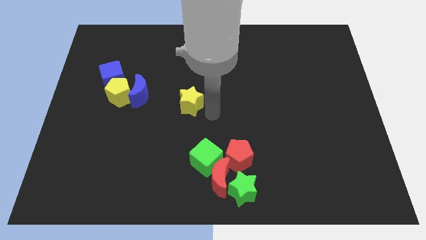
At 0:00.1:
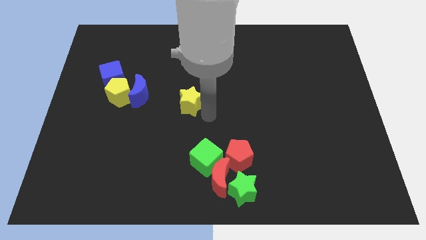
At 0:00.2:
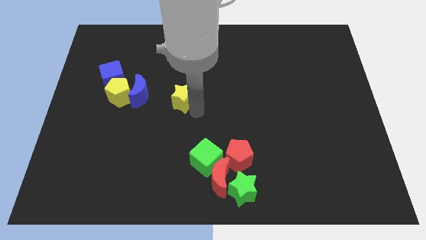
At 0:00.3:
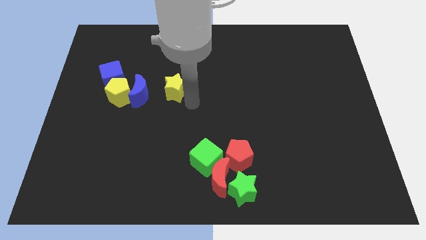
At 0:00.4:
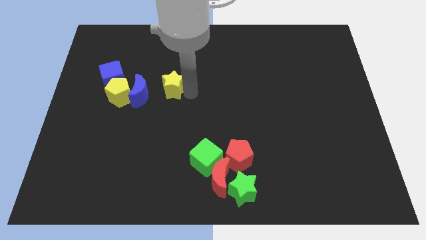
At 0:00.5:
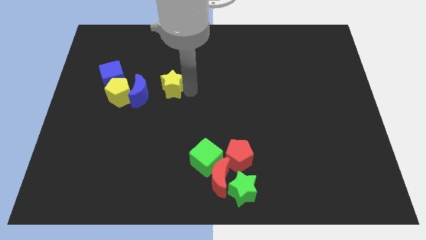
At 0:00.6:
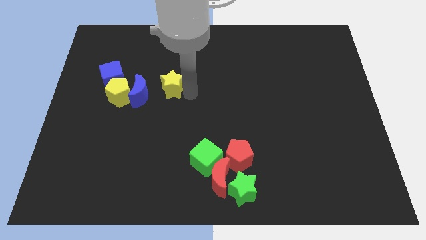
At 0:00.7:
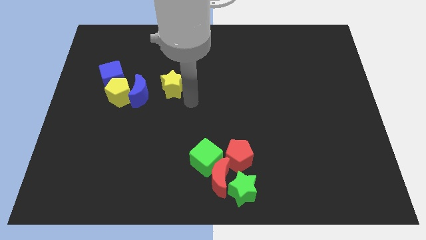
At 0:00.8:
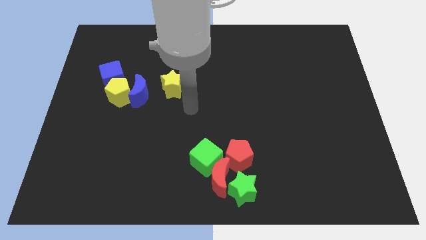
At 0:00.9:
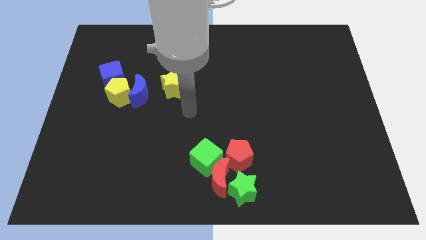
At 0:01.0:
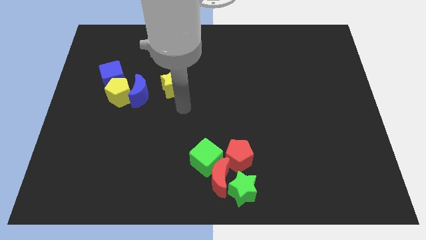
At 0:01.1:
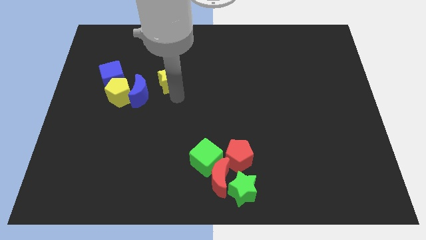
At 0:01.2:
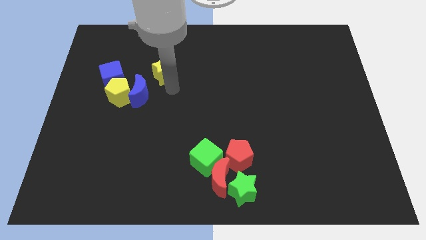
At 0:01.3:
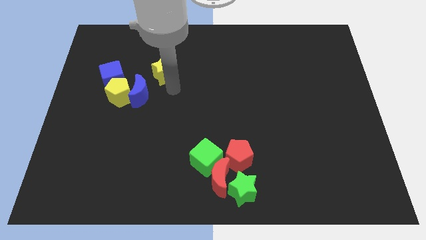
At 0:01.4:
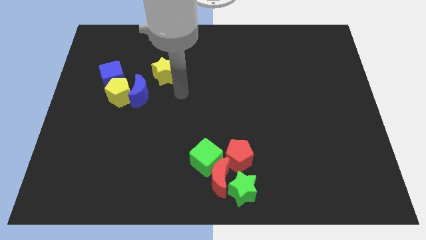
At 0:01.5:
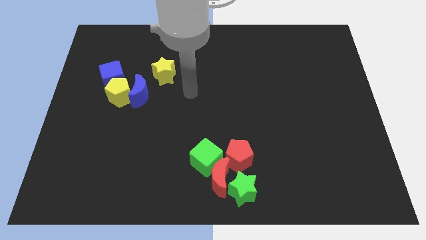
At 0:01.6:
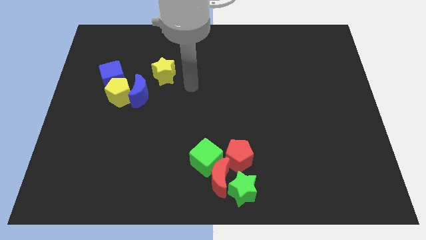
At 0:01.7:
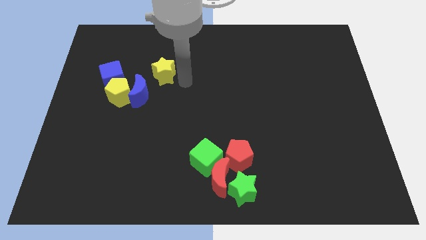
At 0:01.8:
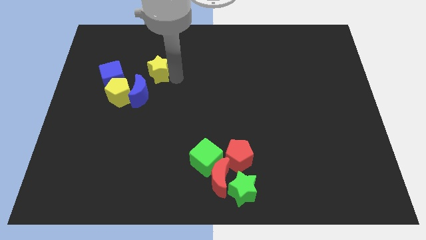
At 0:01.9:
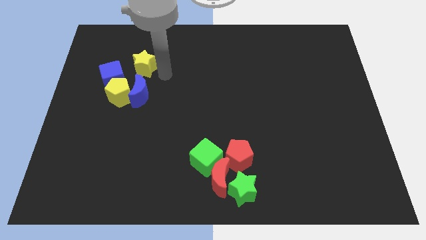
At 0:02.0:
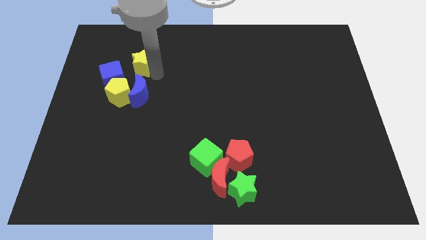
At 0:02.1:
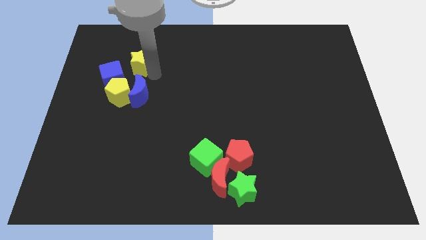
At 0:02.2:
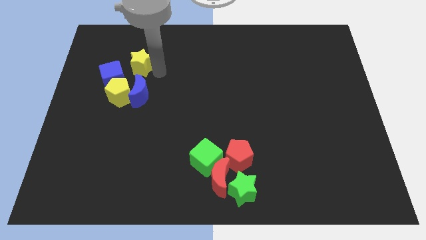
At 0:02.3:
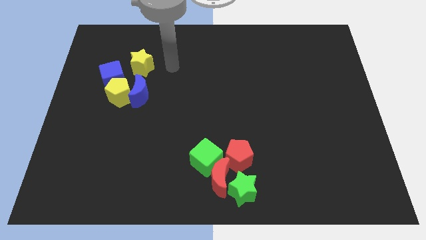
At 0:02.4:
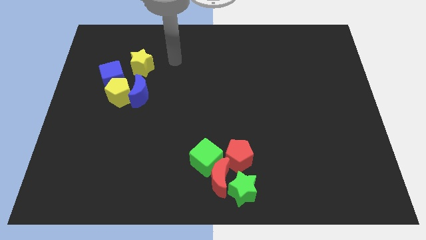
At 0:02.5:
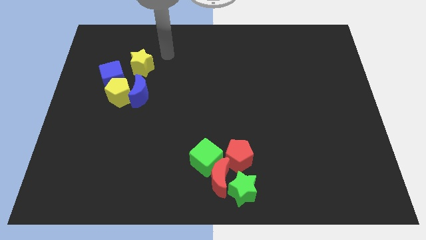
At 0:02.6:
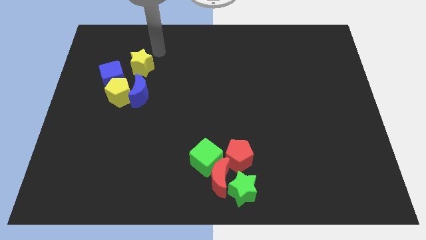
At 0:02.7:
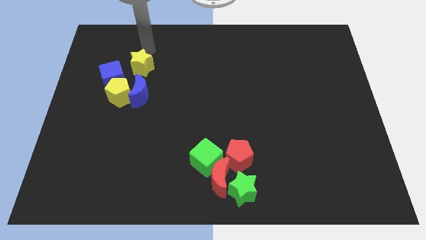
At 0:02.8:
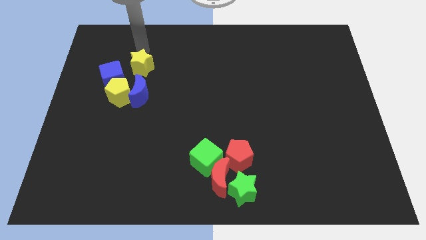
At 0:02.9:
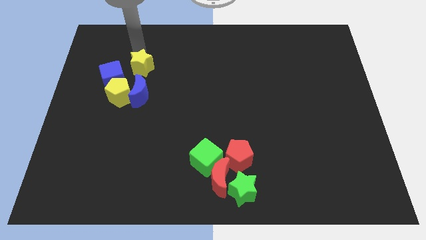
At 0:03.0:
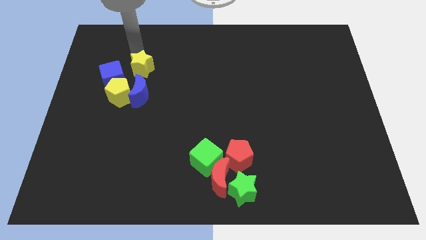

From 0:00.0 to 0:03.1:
place the yellow star to the top of blue moon

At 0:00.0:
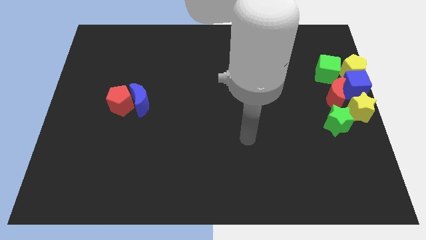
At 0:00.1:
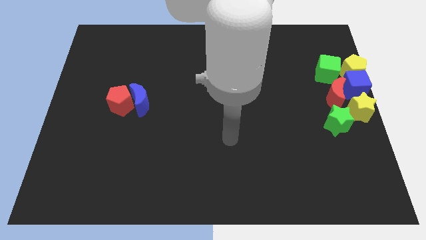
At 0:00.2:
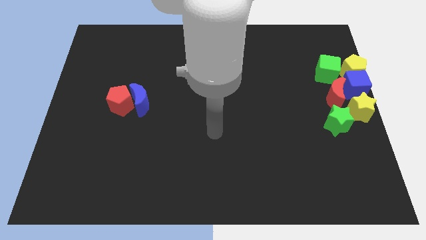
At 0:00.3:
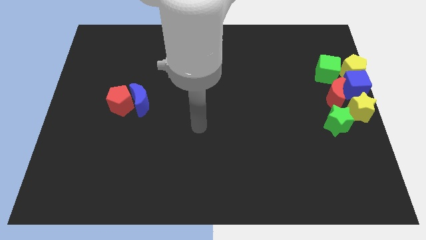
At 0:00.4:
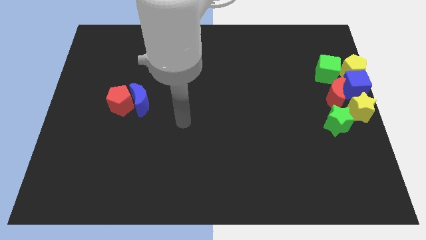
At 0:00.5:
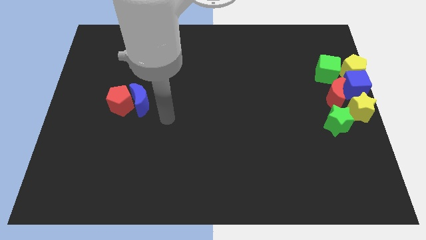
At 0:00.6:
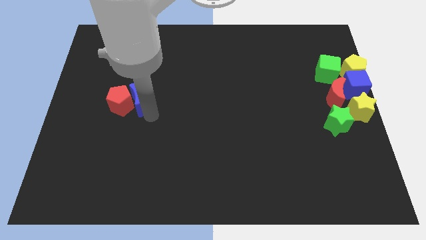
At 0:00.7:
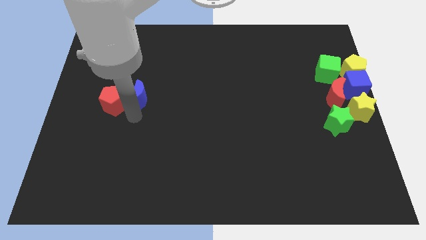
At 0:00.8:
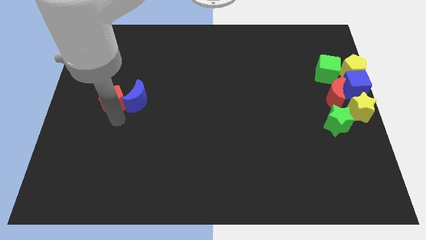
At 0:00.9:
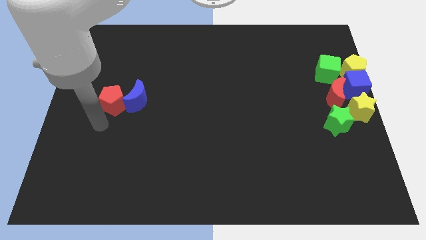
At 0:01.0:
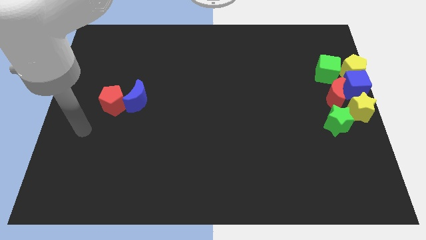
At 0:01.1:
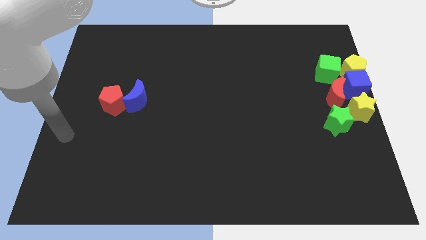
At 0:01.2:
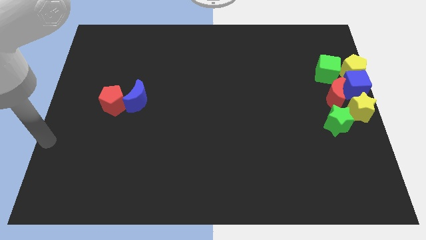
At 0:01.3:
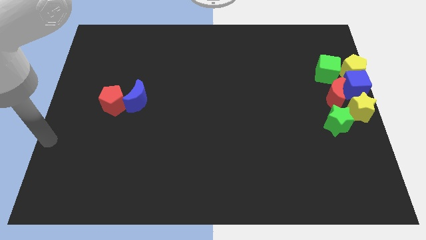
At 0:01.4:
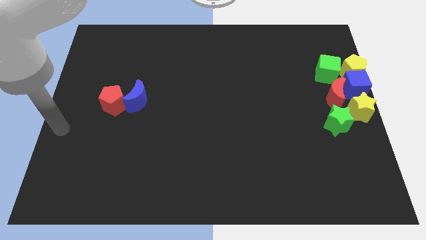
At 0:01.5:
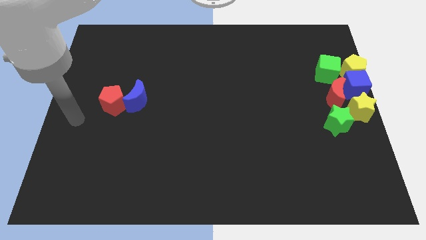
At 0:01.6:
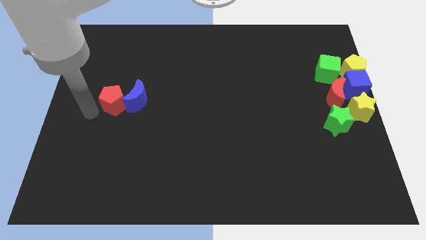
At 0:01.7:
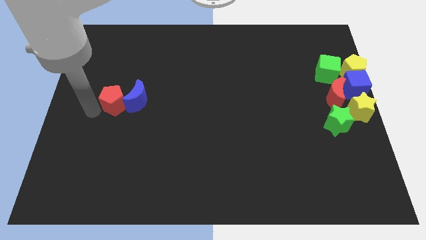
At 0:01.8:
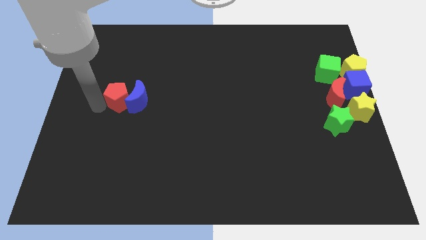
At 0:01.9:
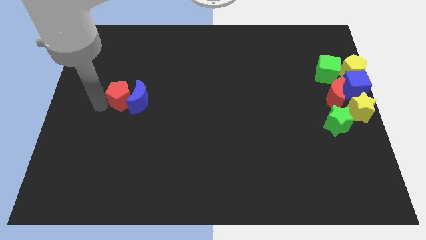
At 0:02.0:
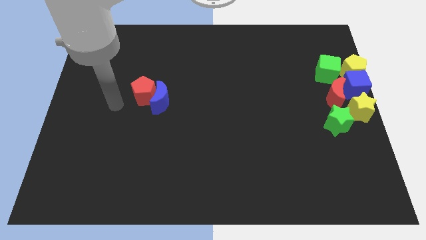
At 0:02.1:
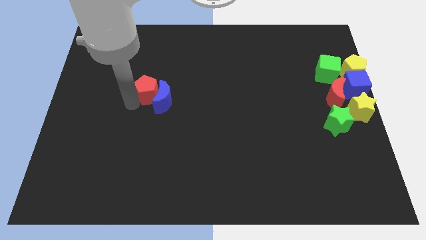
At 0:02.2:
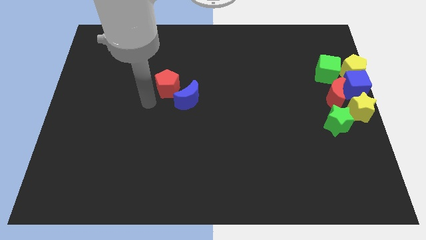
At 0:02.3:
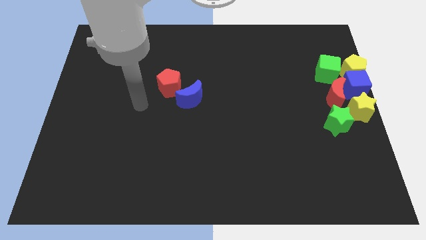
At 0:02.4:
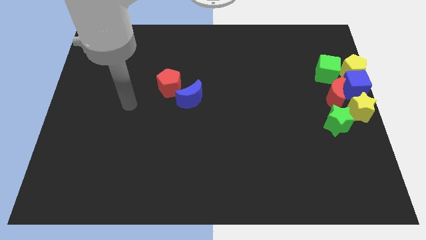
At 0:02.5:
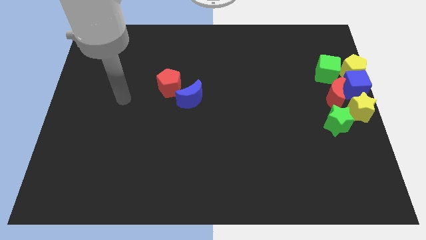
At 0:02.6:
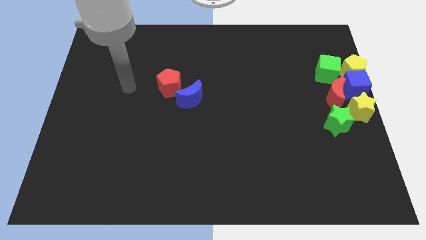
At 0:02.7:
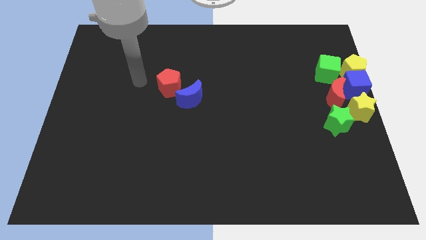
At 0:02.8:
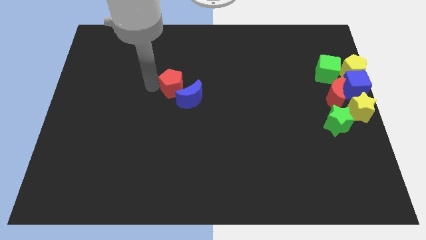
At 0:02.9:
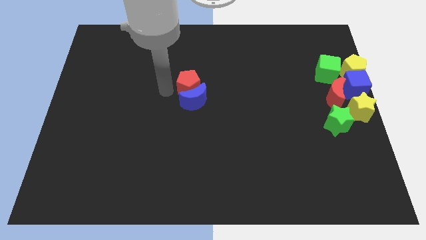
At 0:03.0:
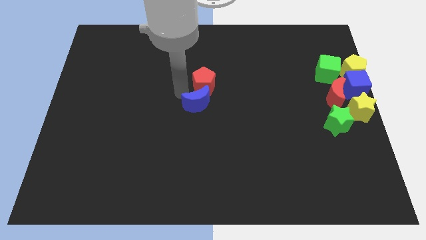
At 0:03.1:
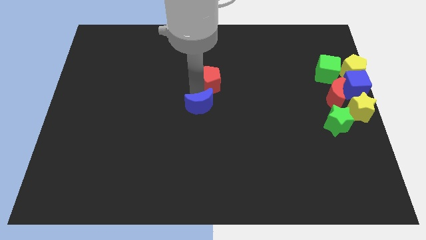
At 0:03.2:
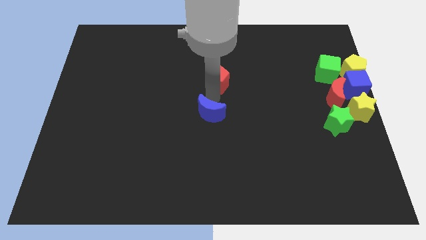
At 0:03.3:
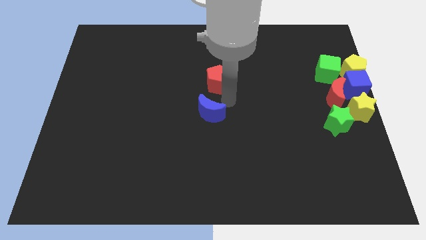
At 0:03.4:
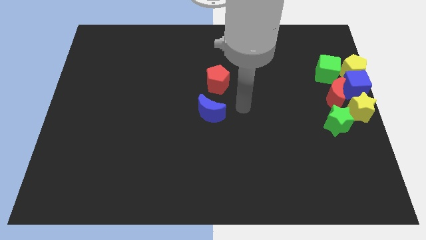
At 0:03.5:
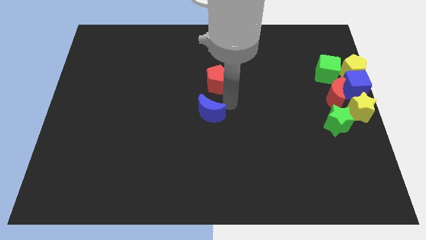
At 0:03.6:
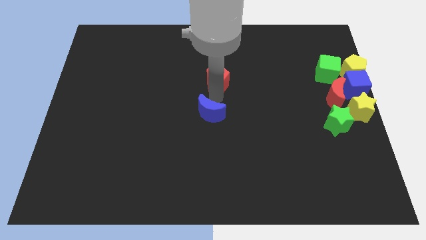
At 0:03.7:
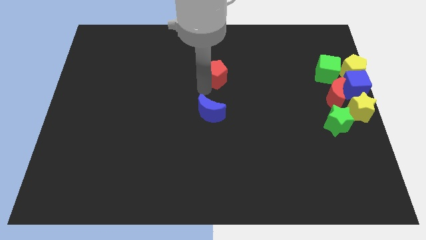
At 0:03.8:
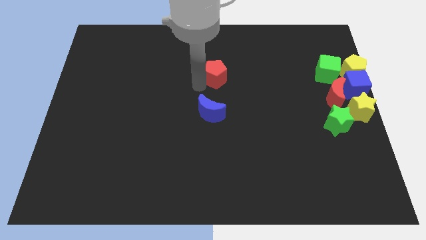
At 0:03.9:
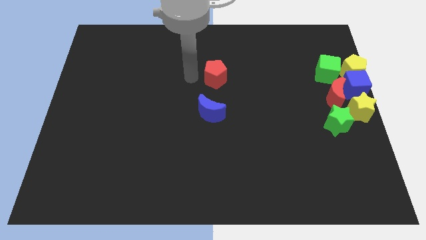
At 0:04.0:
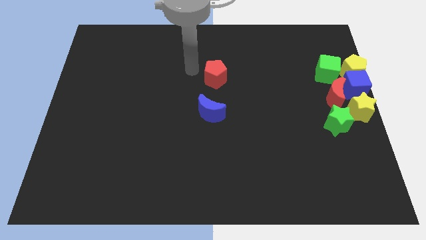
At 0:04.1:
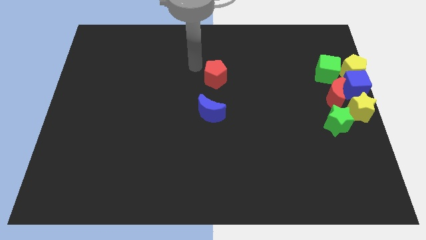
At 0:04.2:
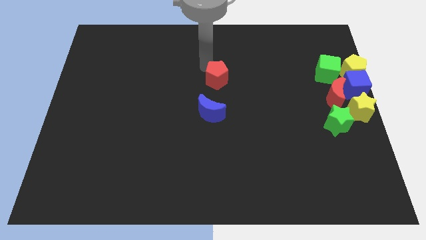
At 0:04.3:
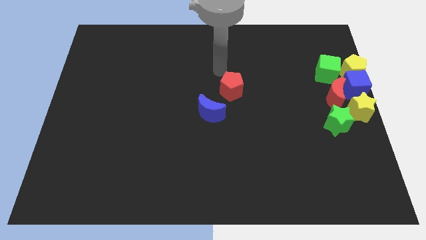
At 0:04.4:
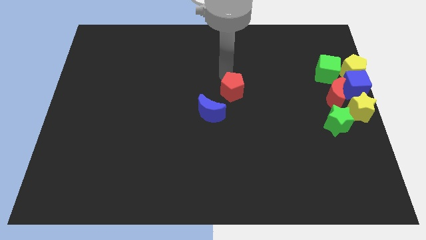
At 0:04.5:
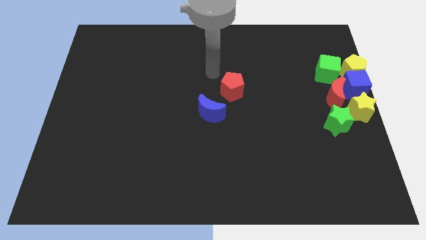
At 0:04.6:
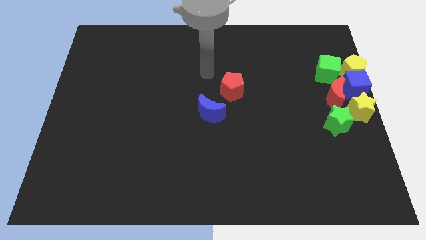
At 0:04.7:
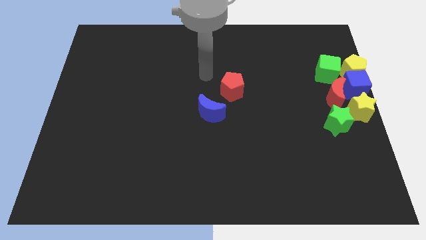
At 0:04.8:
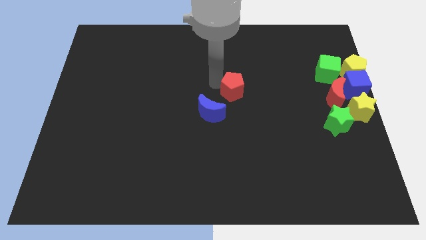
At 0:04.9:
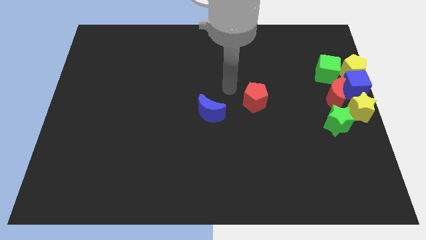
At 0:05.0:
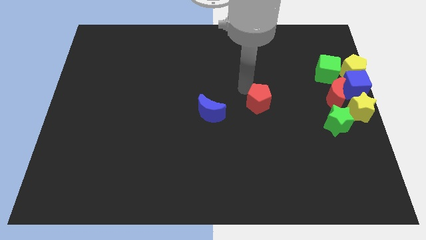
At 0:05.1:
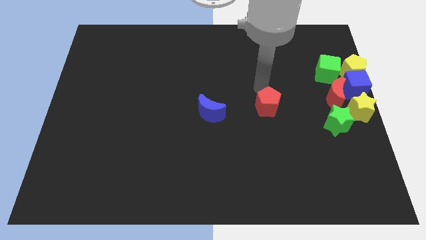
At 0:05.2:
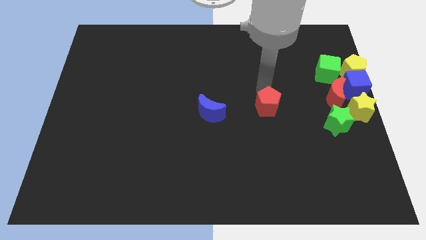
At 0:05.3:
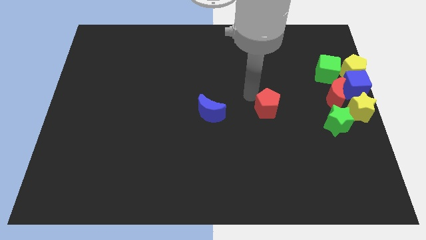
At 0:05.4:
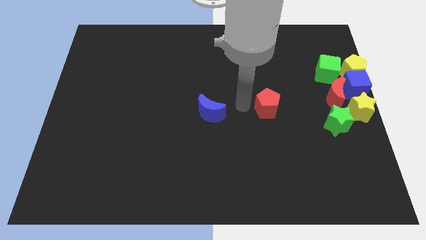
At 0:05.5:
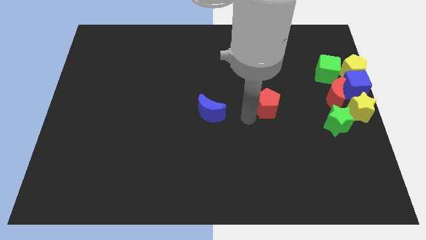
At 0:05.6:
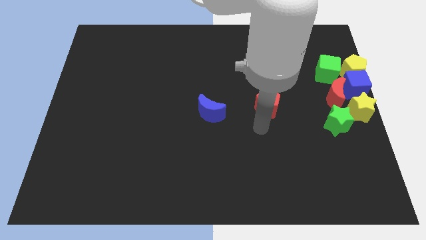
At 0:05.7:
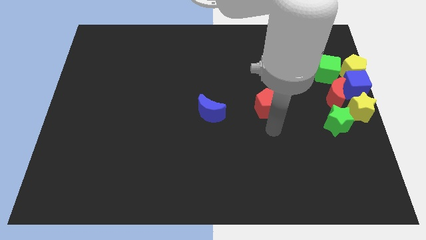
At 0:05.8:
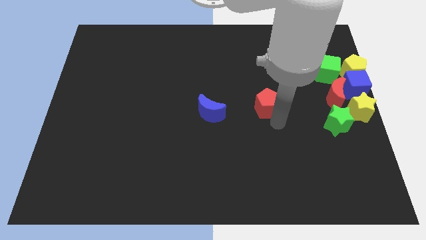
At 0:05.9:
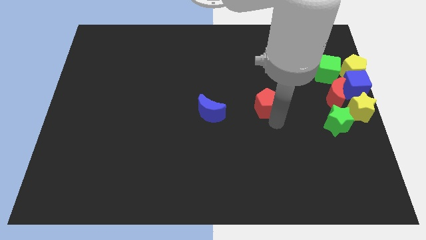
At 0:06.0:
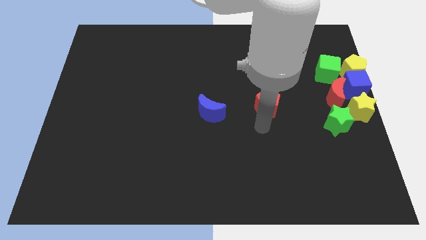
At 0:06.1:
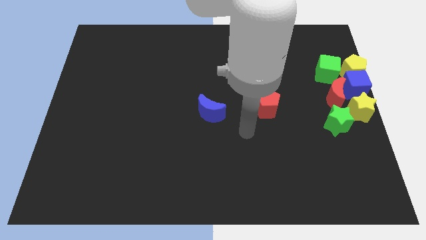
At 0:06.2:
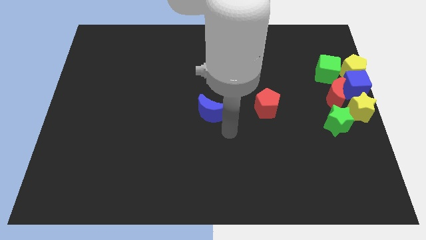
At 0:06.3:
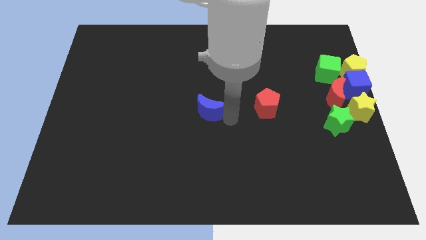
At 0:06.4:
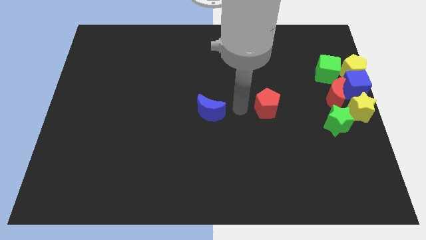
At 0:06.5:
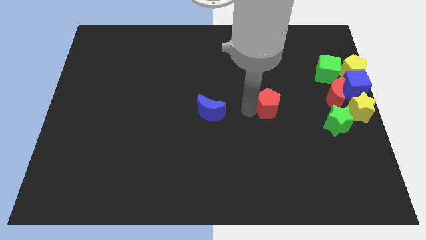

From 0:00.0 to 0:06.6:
place the red pentagon and the blue crescent at the center of the board
